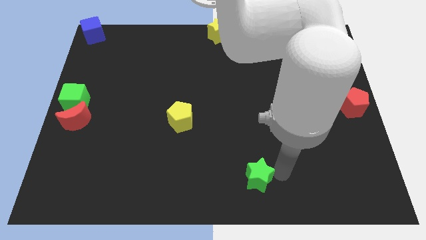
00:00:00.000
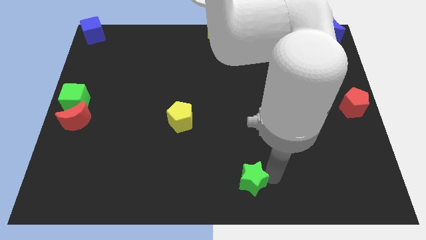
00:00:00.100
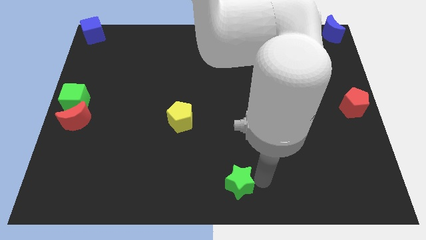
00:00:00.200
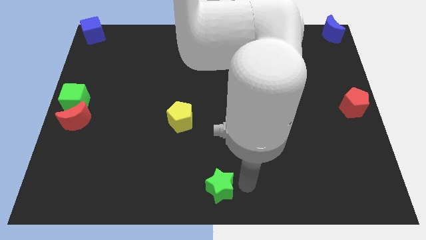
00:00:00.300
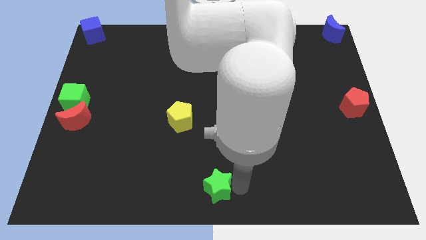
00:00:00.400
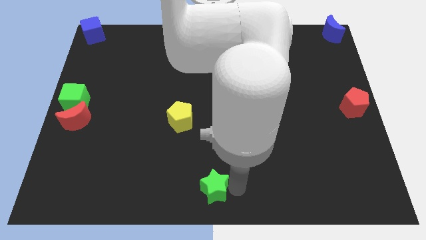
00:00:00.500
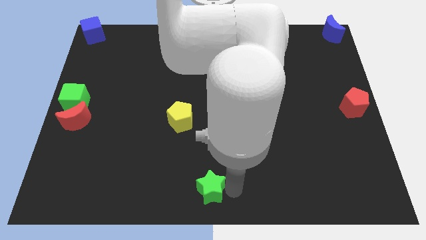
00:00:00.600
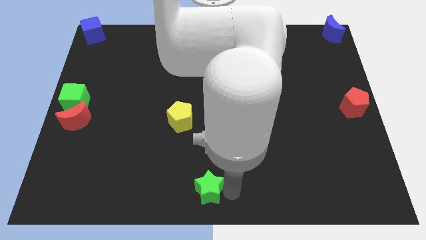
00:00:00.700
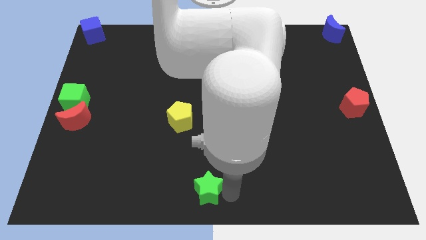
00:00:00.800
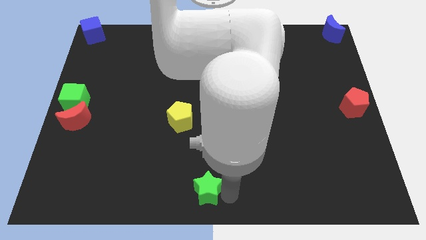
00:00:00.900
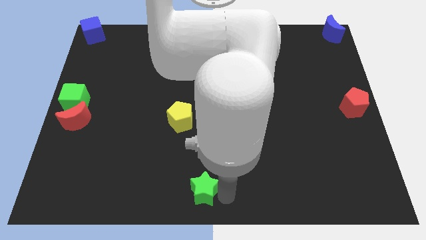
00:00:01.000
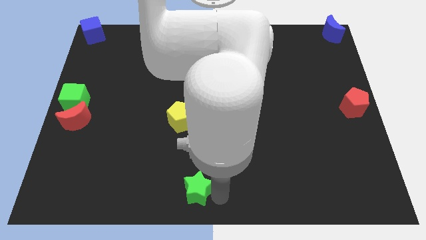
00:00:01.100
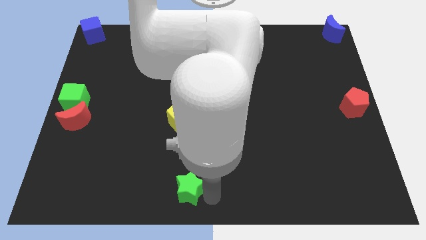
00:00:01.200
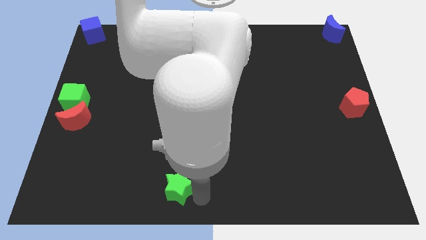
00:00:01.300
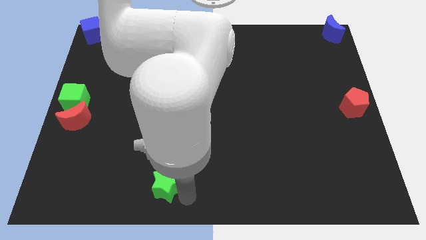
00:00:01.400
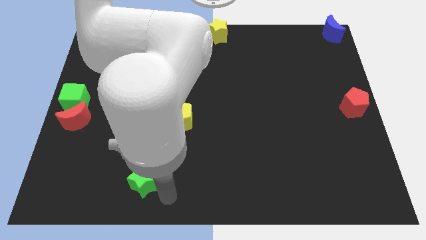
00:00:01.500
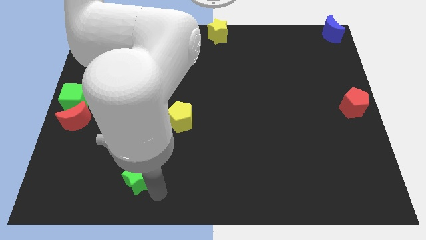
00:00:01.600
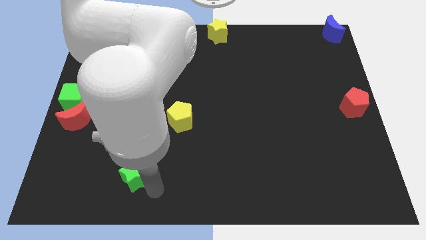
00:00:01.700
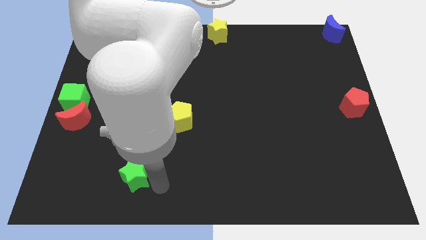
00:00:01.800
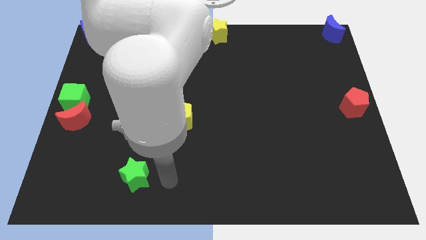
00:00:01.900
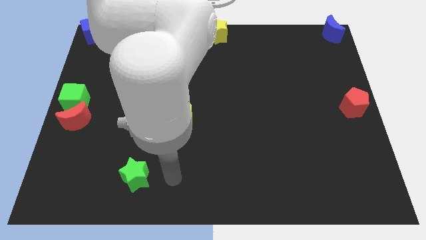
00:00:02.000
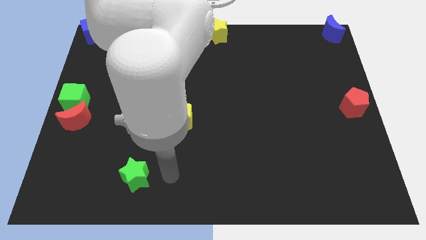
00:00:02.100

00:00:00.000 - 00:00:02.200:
place the green star diagonally left to right of the red crescent

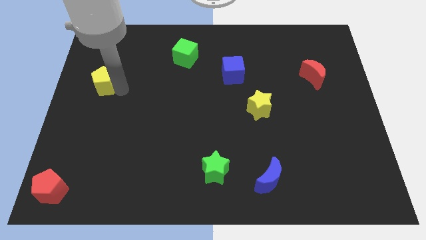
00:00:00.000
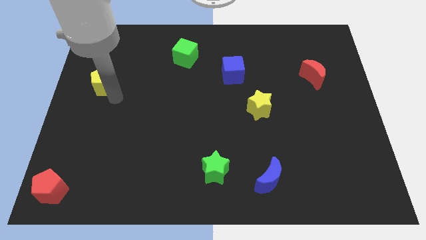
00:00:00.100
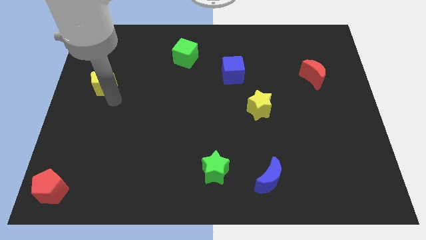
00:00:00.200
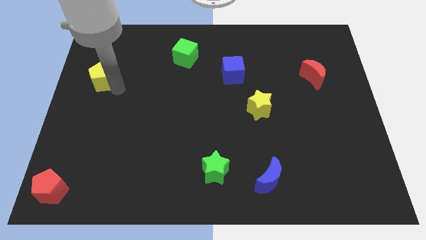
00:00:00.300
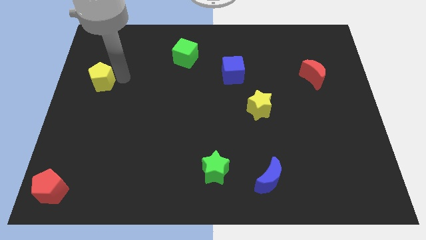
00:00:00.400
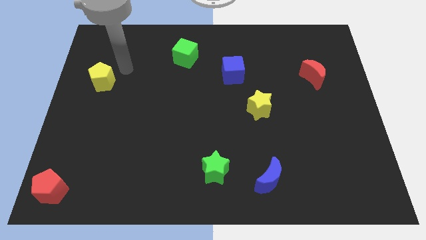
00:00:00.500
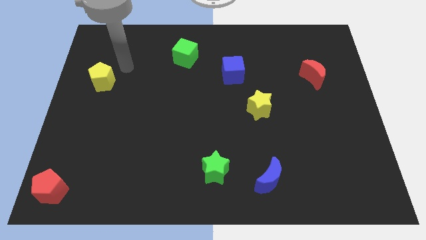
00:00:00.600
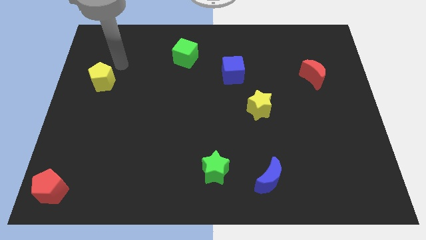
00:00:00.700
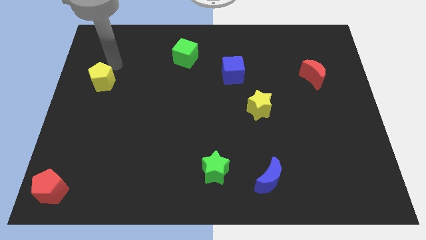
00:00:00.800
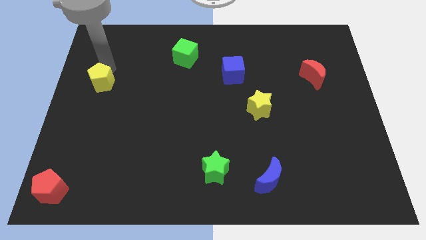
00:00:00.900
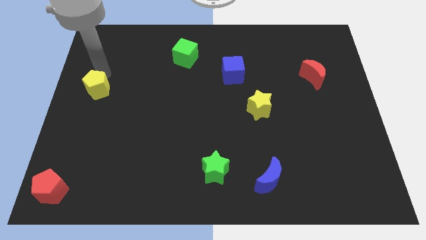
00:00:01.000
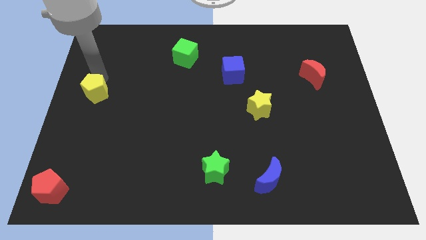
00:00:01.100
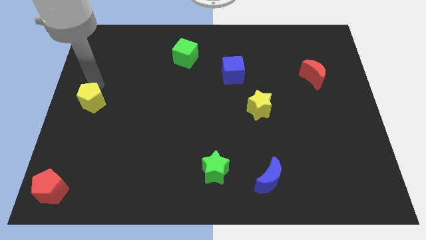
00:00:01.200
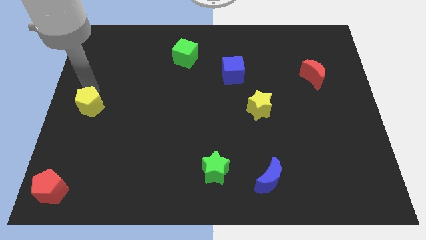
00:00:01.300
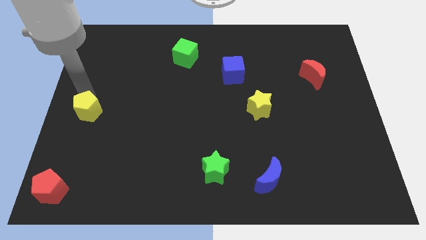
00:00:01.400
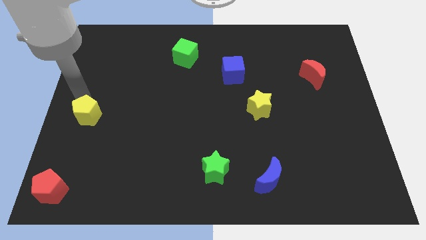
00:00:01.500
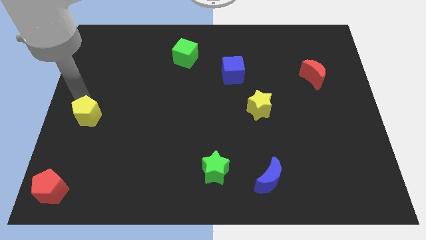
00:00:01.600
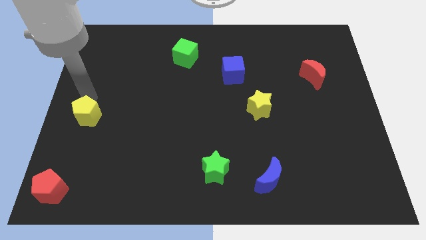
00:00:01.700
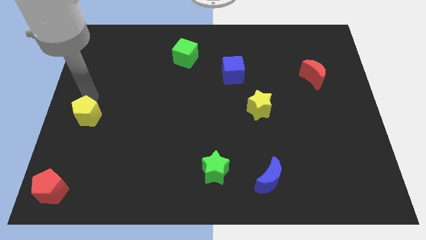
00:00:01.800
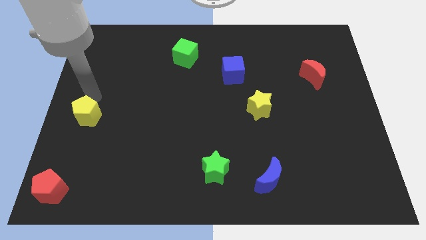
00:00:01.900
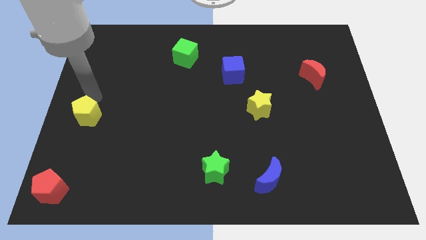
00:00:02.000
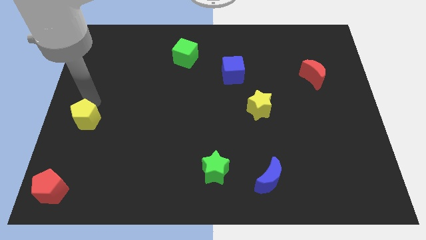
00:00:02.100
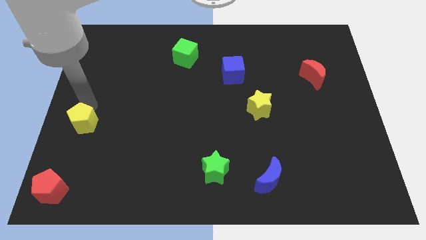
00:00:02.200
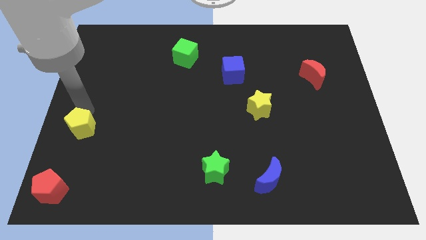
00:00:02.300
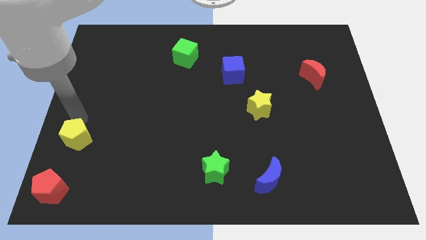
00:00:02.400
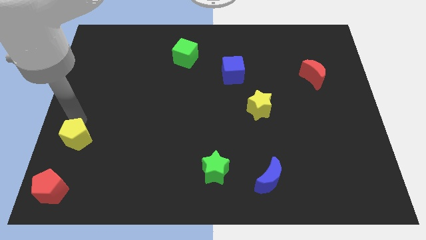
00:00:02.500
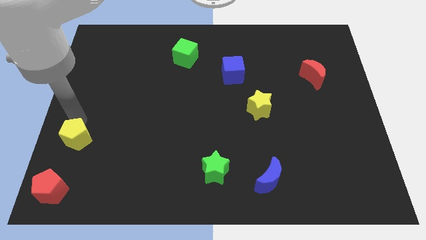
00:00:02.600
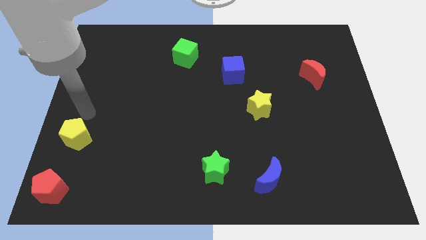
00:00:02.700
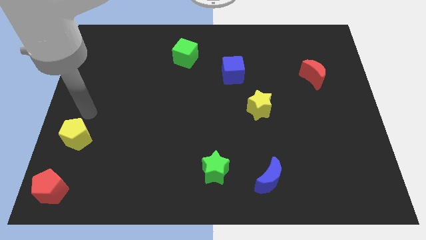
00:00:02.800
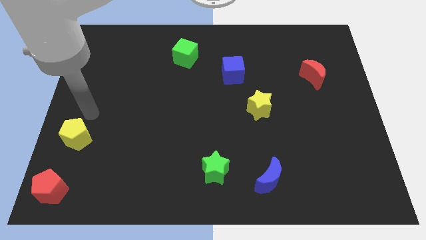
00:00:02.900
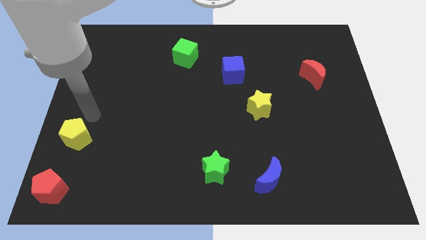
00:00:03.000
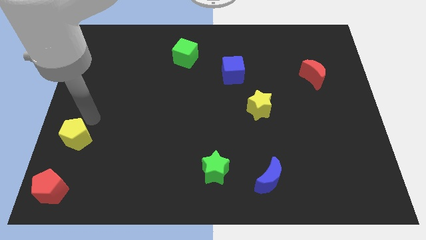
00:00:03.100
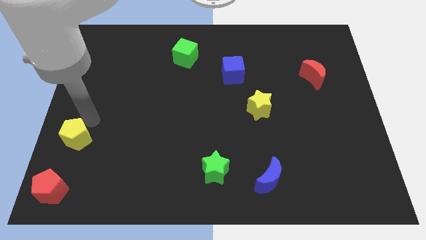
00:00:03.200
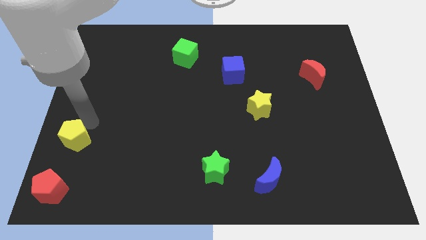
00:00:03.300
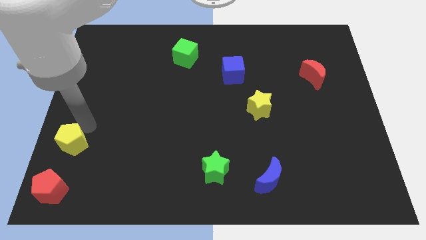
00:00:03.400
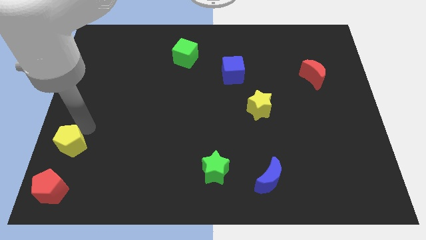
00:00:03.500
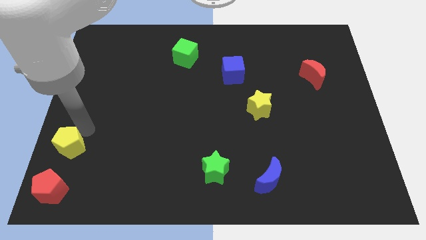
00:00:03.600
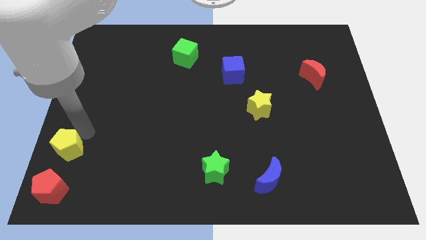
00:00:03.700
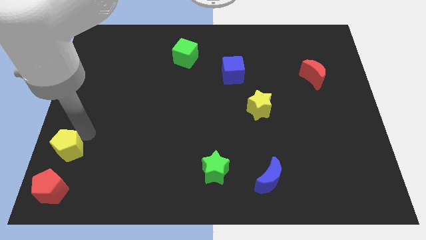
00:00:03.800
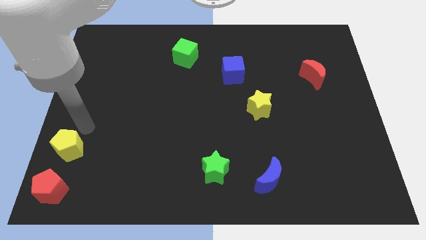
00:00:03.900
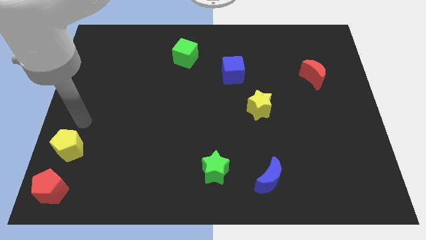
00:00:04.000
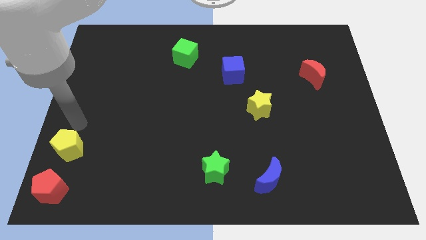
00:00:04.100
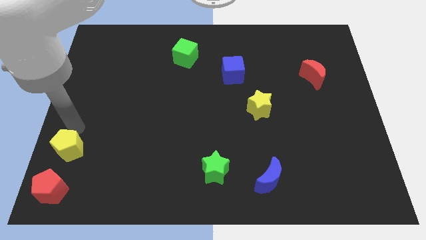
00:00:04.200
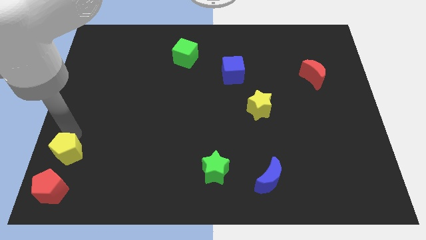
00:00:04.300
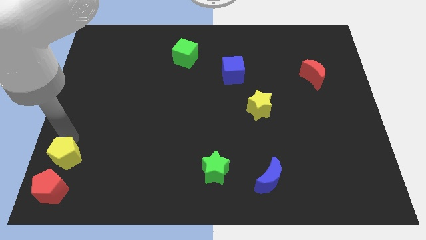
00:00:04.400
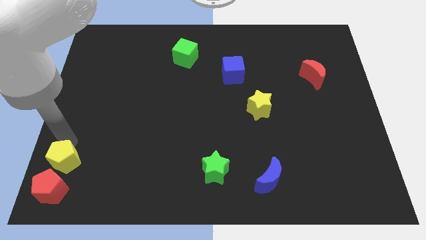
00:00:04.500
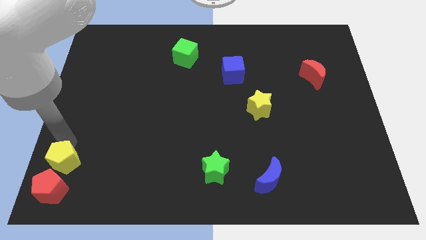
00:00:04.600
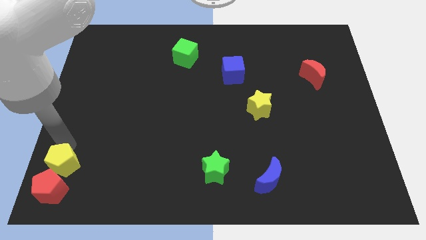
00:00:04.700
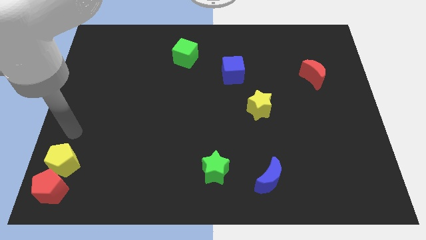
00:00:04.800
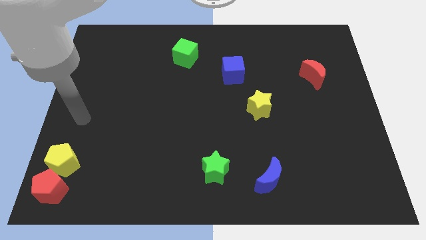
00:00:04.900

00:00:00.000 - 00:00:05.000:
place yellow pentagon above red pentagon

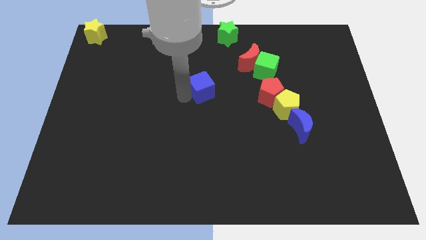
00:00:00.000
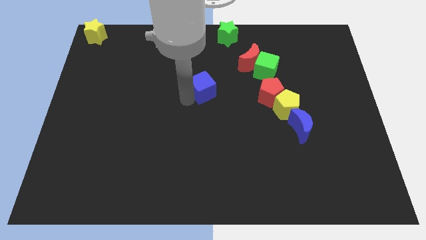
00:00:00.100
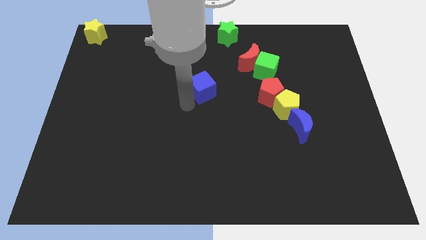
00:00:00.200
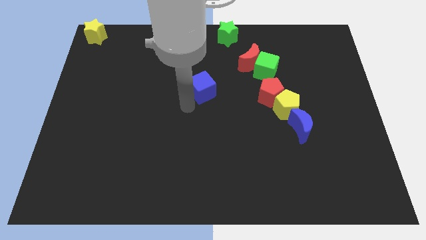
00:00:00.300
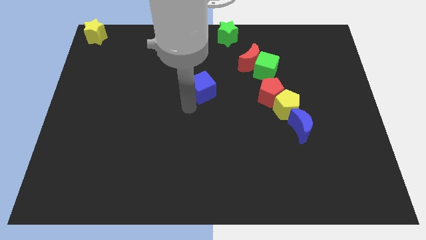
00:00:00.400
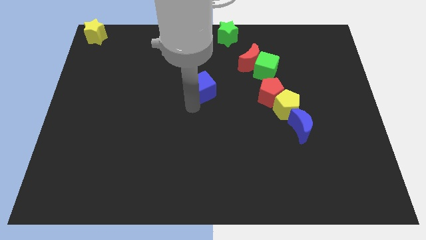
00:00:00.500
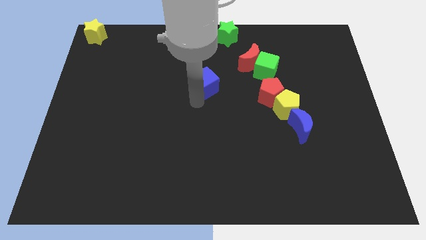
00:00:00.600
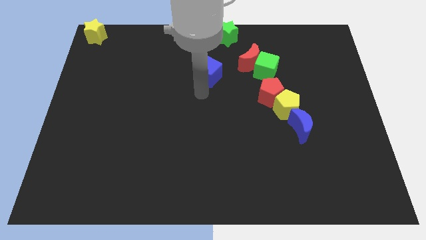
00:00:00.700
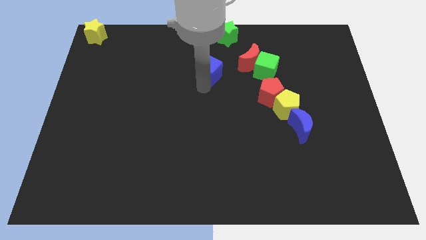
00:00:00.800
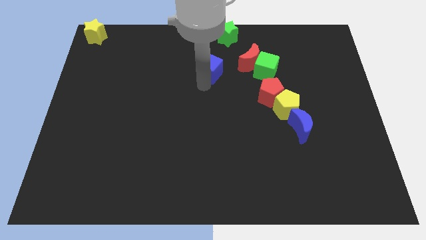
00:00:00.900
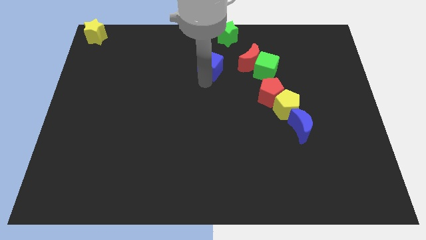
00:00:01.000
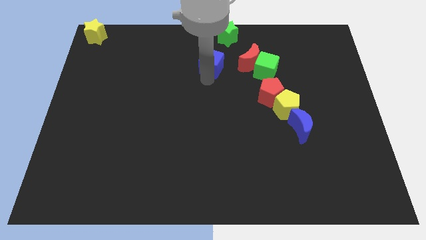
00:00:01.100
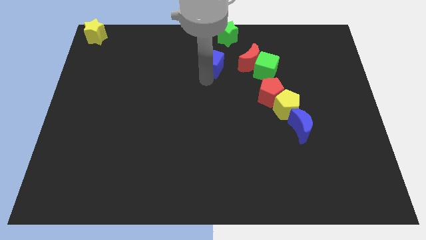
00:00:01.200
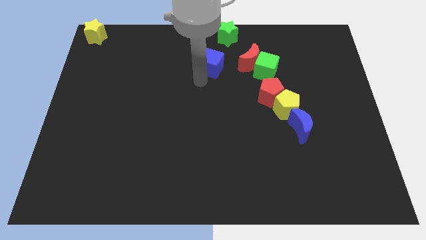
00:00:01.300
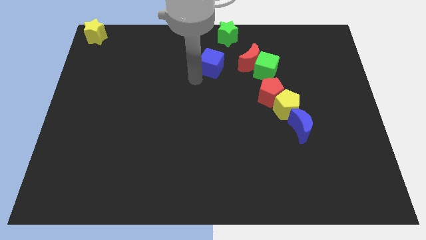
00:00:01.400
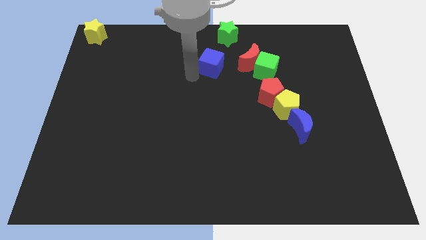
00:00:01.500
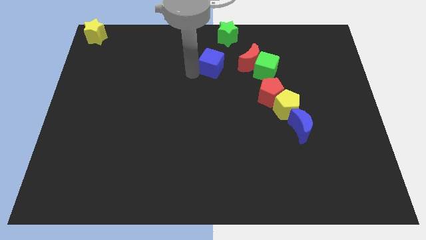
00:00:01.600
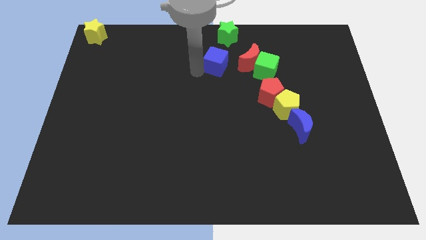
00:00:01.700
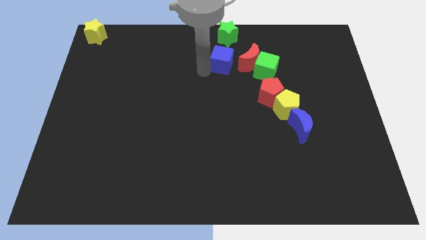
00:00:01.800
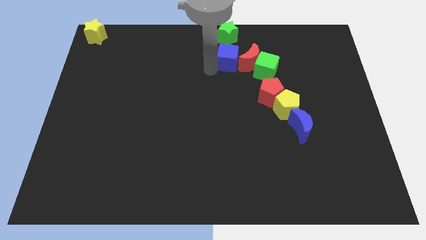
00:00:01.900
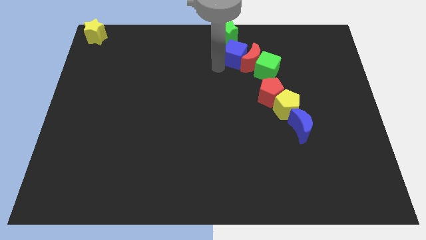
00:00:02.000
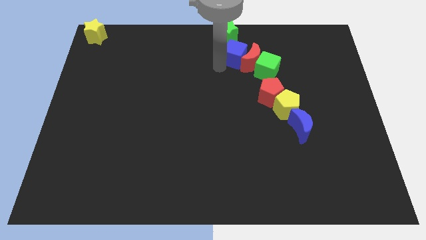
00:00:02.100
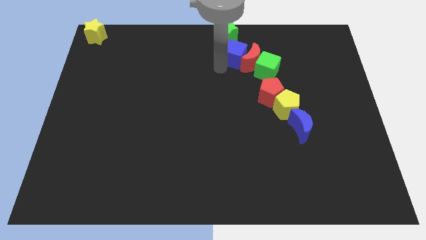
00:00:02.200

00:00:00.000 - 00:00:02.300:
push the blue cube into the red moon
